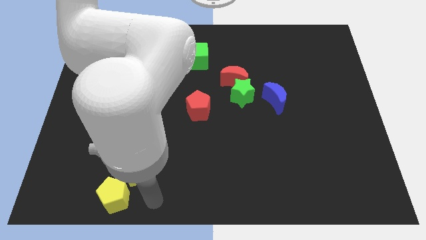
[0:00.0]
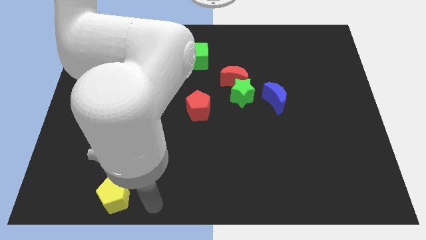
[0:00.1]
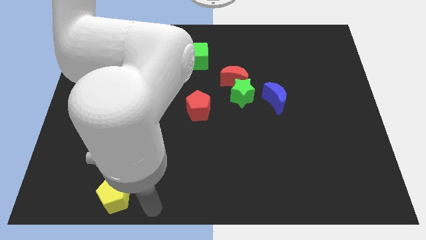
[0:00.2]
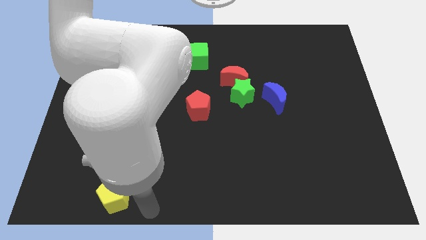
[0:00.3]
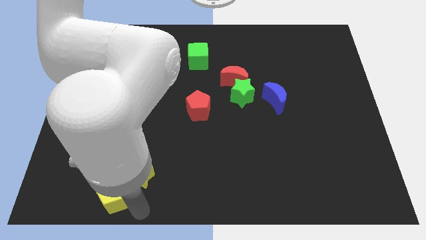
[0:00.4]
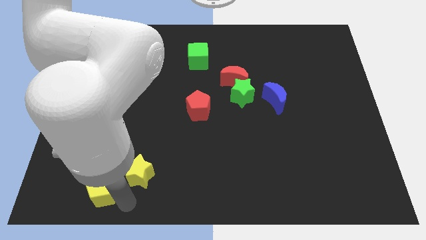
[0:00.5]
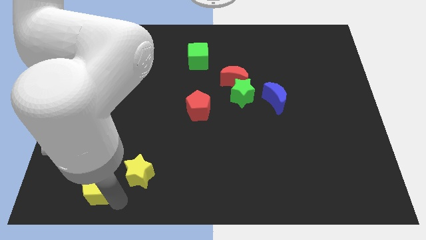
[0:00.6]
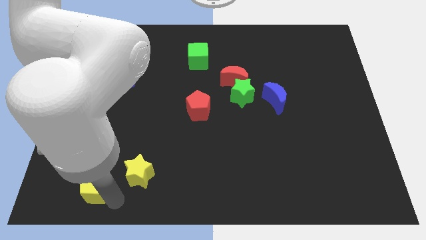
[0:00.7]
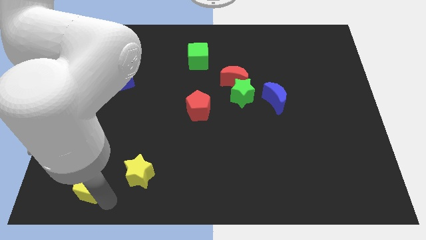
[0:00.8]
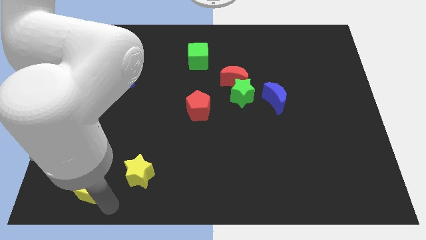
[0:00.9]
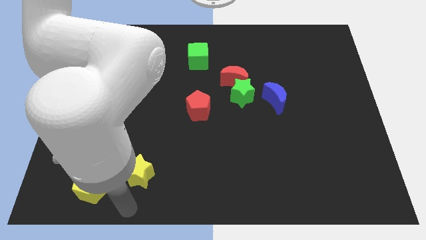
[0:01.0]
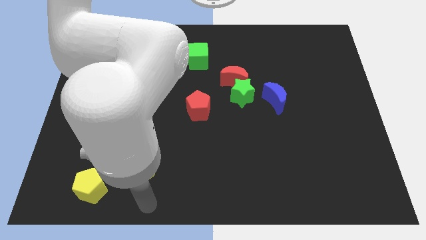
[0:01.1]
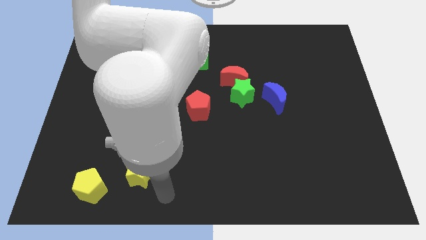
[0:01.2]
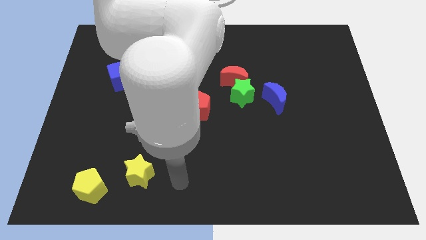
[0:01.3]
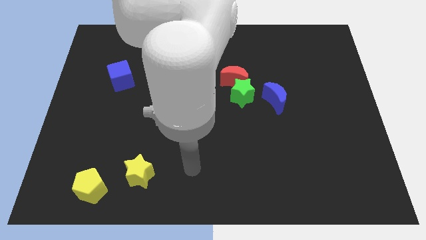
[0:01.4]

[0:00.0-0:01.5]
push the yellow pentagon slightly away from the yellow star

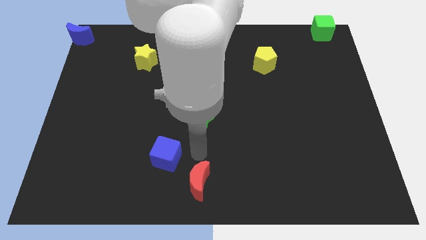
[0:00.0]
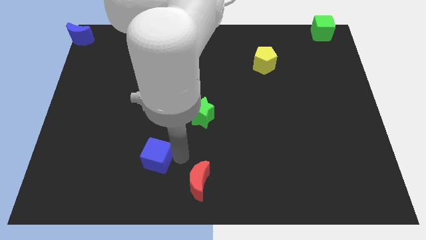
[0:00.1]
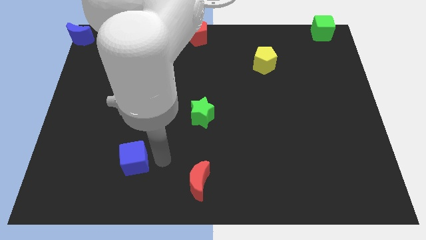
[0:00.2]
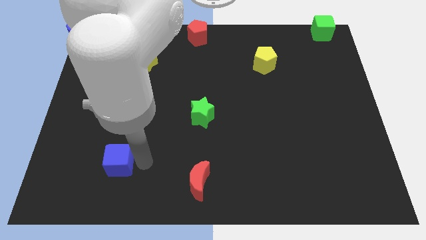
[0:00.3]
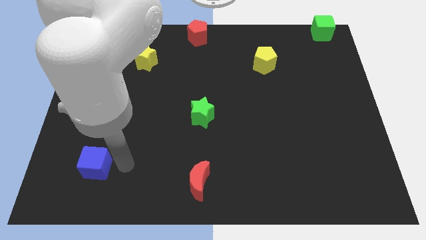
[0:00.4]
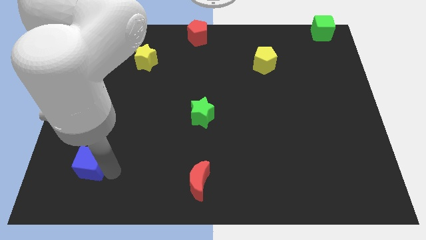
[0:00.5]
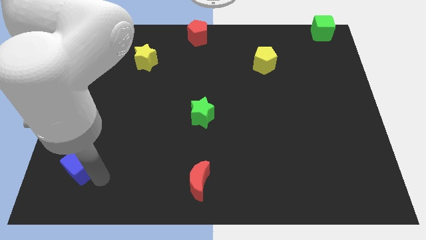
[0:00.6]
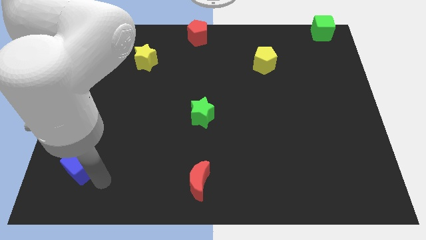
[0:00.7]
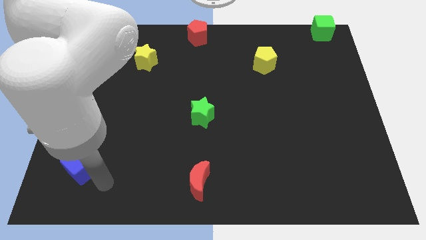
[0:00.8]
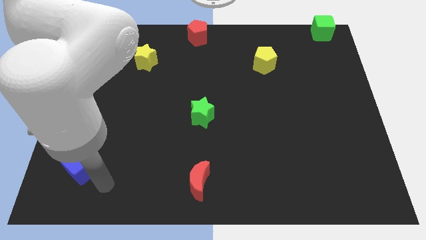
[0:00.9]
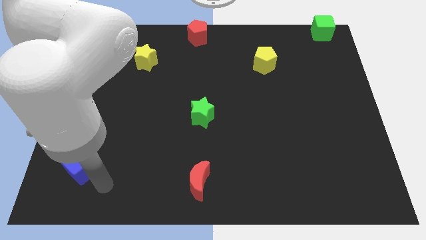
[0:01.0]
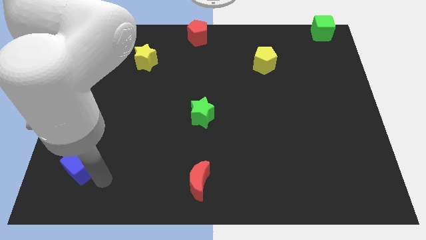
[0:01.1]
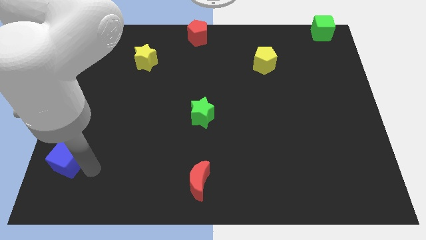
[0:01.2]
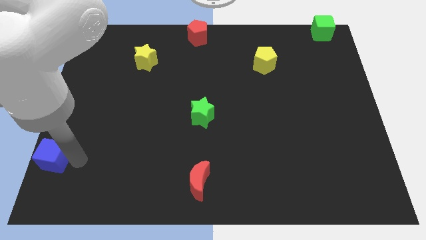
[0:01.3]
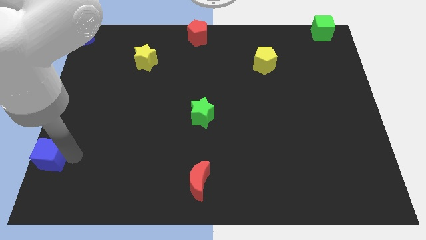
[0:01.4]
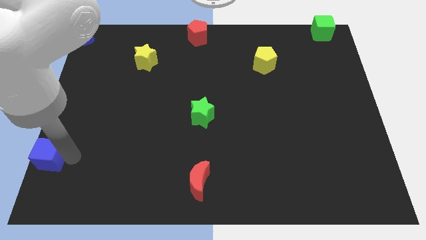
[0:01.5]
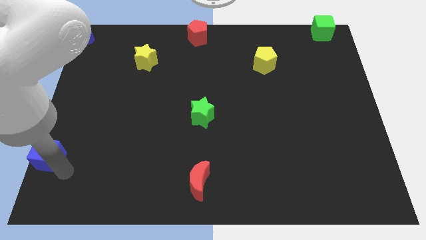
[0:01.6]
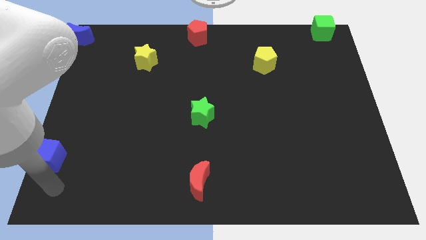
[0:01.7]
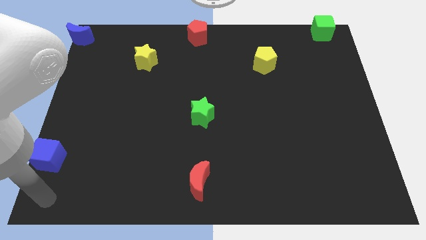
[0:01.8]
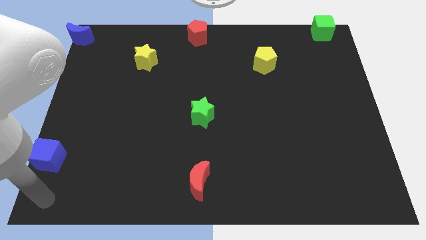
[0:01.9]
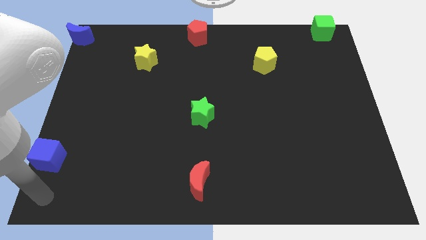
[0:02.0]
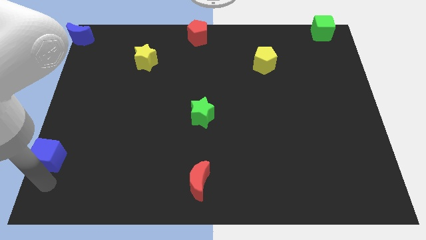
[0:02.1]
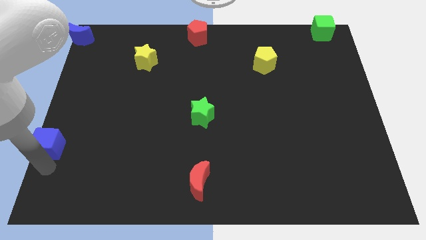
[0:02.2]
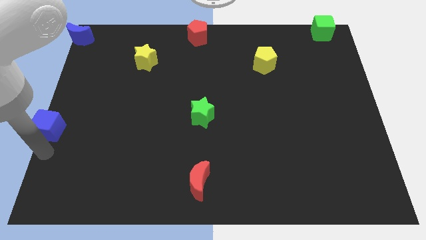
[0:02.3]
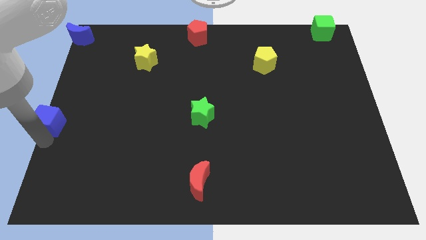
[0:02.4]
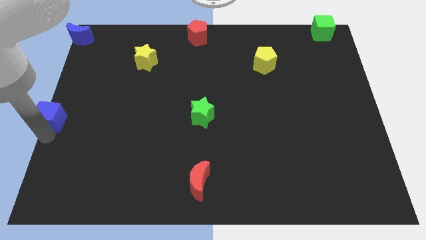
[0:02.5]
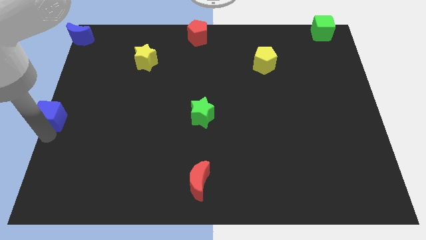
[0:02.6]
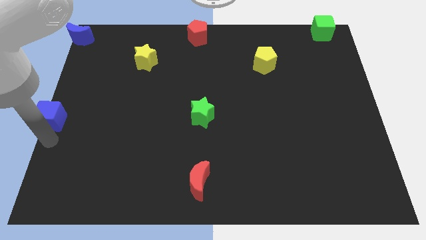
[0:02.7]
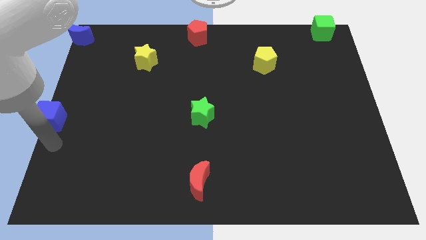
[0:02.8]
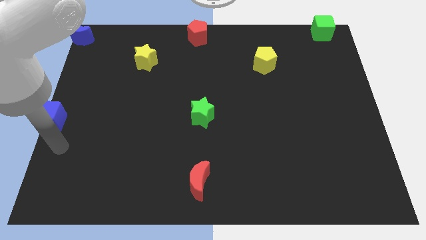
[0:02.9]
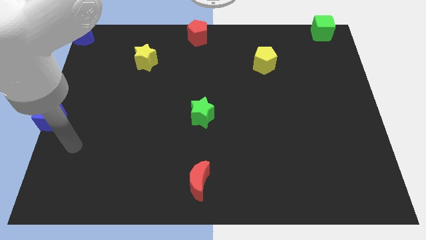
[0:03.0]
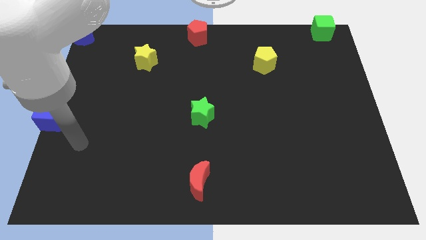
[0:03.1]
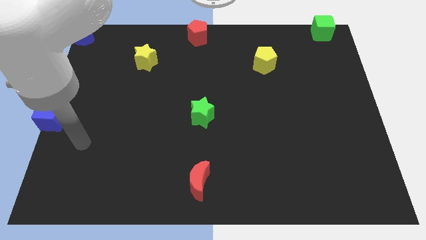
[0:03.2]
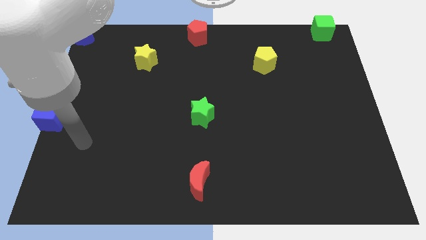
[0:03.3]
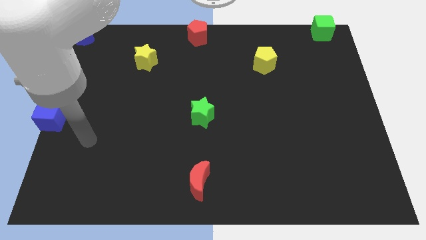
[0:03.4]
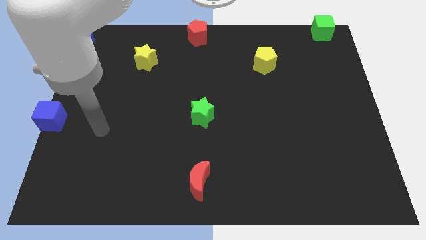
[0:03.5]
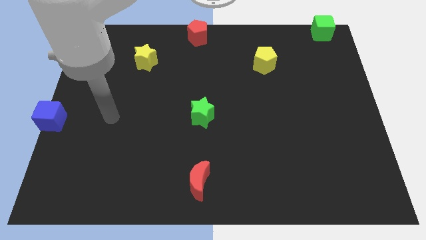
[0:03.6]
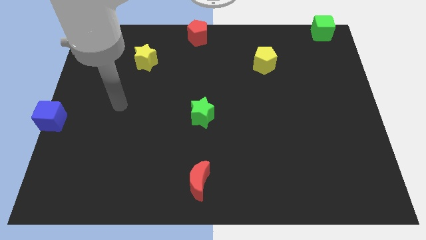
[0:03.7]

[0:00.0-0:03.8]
place the blue cube to the center left of the board

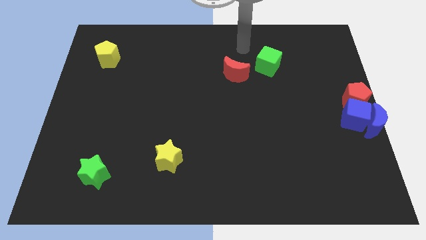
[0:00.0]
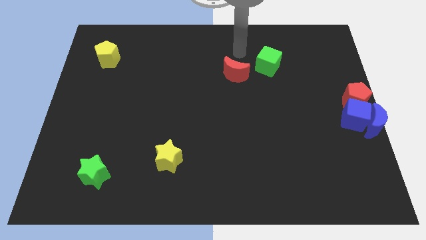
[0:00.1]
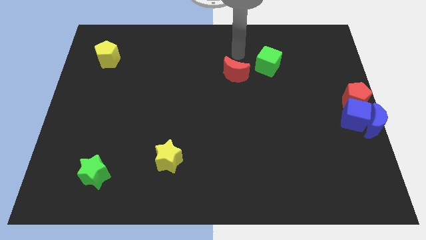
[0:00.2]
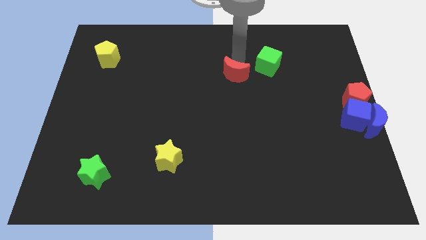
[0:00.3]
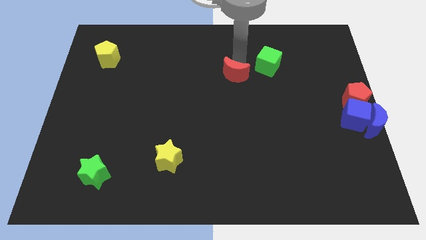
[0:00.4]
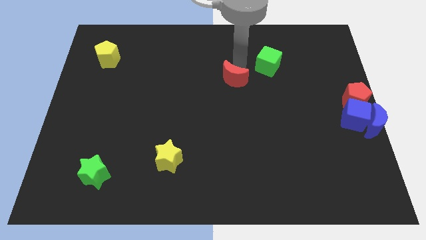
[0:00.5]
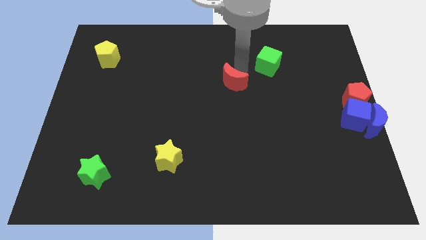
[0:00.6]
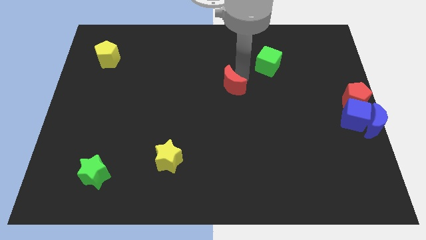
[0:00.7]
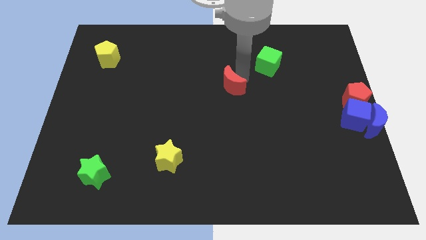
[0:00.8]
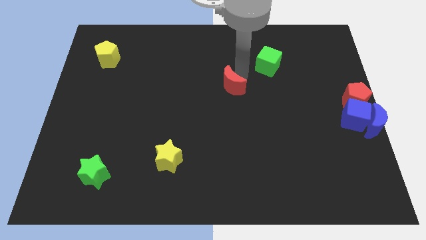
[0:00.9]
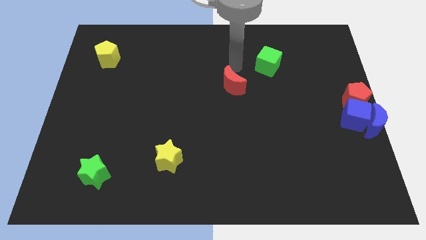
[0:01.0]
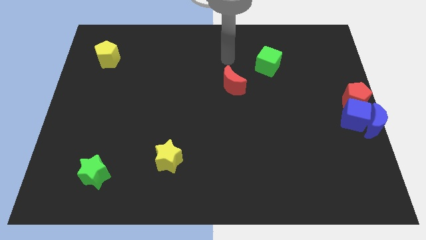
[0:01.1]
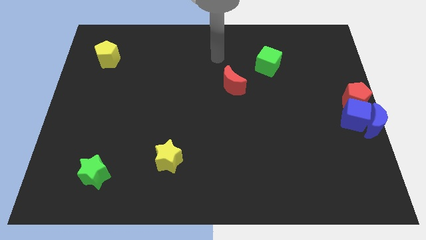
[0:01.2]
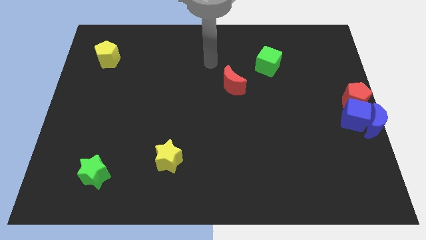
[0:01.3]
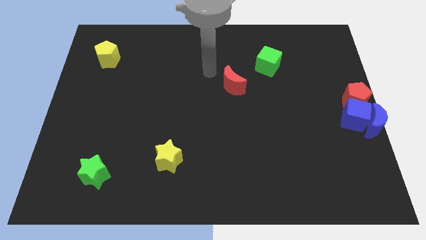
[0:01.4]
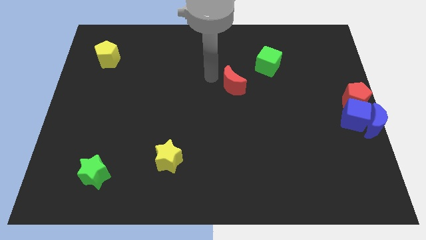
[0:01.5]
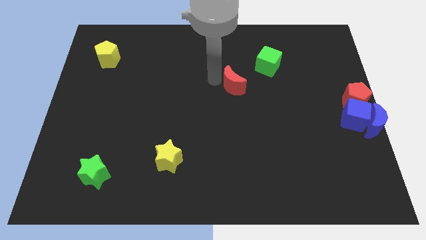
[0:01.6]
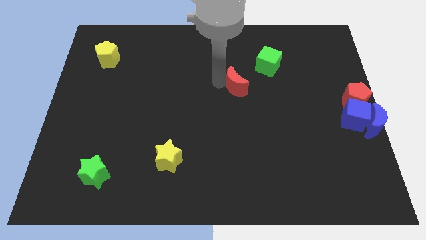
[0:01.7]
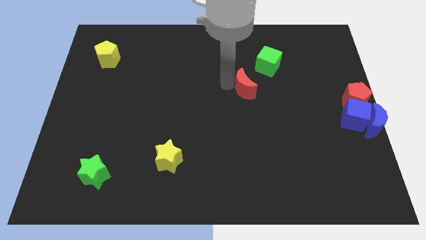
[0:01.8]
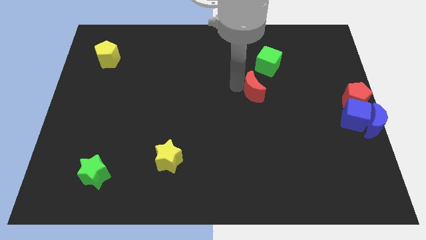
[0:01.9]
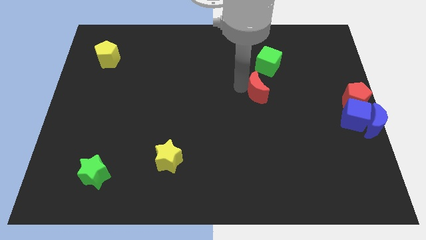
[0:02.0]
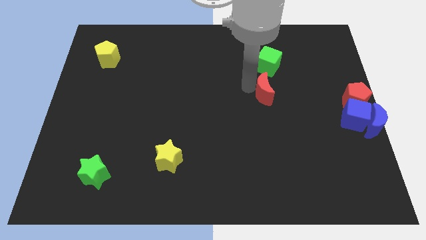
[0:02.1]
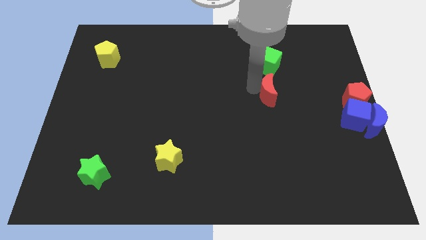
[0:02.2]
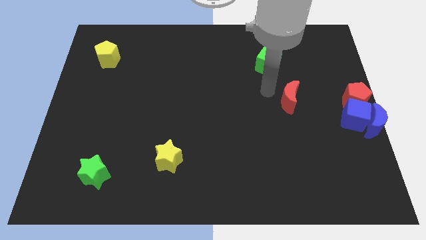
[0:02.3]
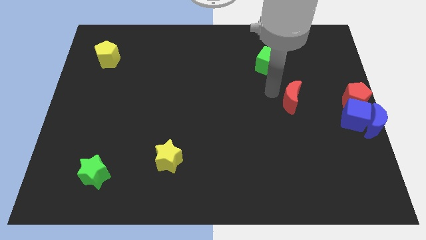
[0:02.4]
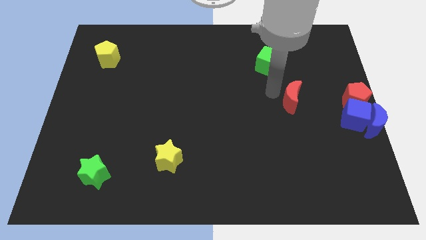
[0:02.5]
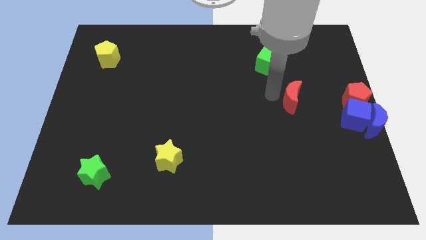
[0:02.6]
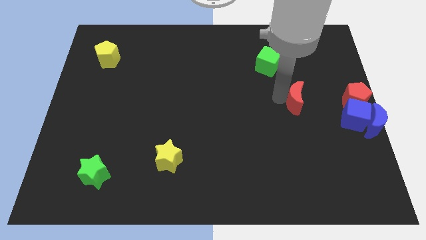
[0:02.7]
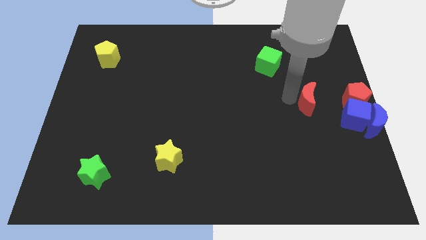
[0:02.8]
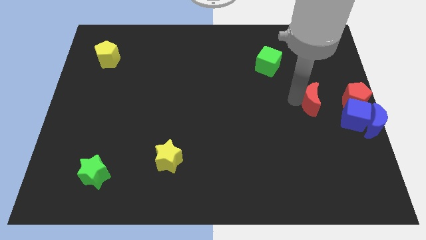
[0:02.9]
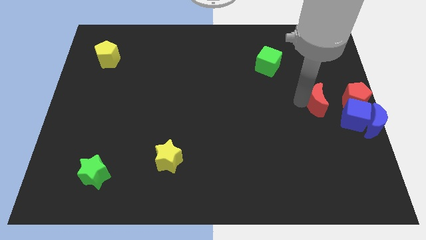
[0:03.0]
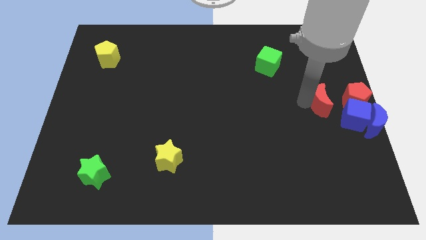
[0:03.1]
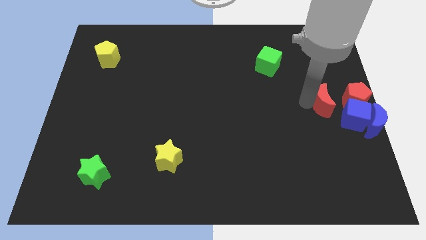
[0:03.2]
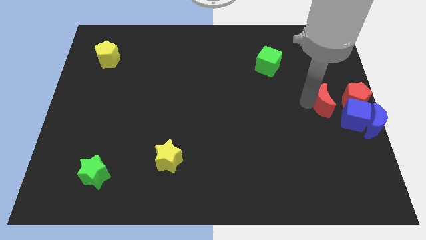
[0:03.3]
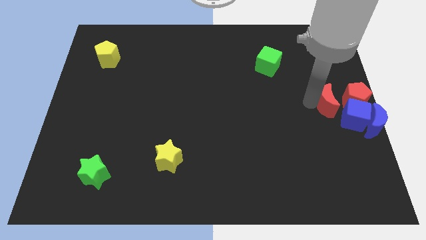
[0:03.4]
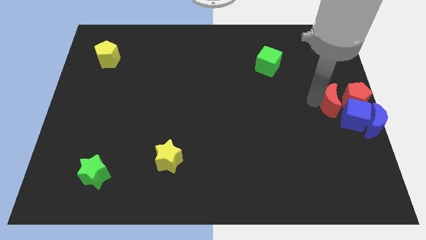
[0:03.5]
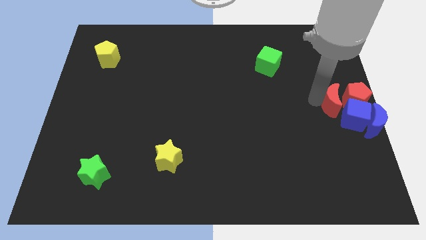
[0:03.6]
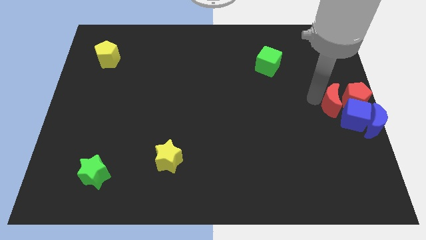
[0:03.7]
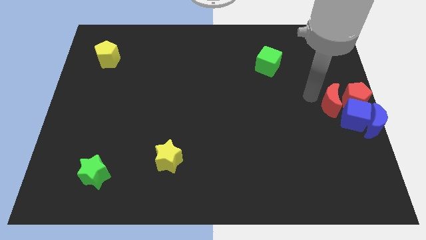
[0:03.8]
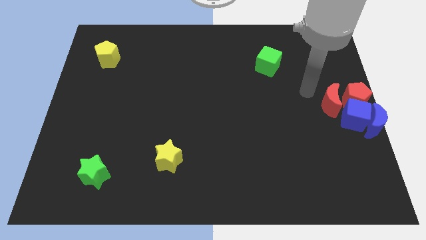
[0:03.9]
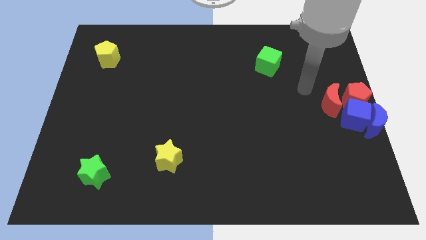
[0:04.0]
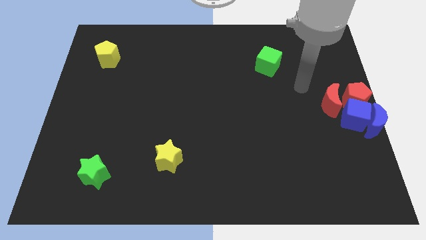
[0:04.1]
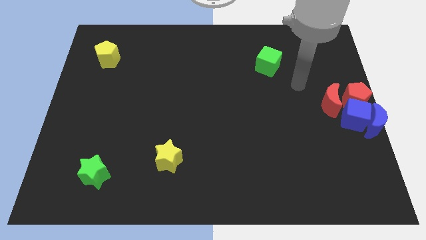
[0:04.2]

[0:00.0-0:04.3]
move the red moon to the left side of the red pentagon
